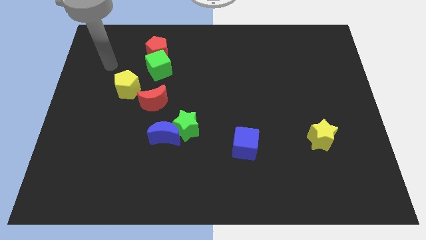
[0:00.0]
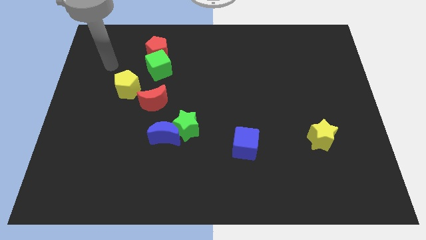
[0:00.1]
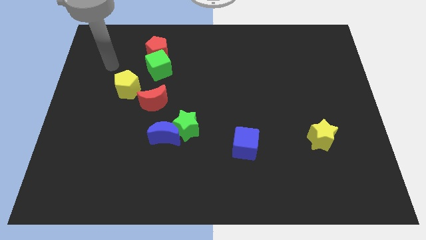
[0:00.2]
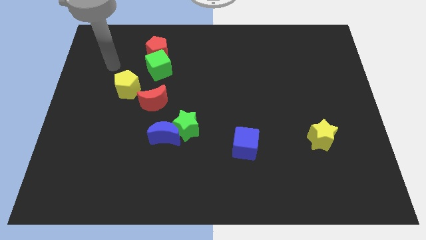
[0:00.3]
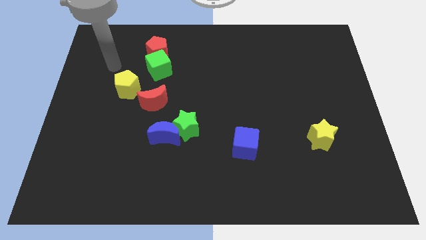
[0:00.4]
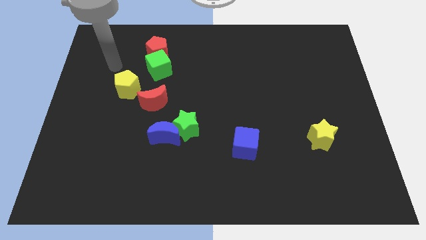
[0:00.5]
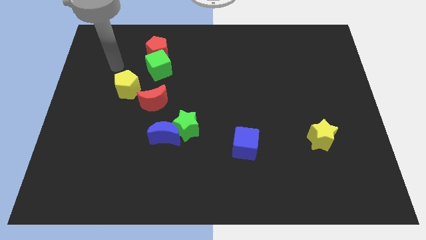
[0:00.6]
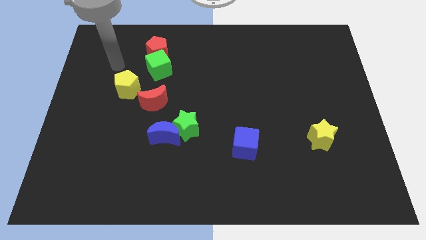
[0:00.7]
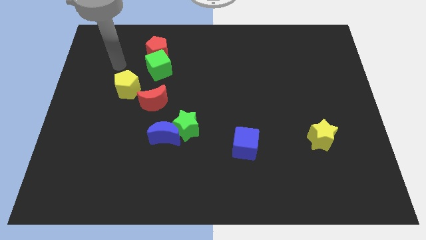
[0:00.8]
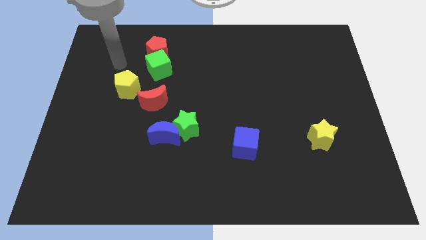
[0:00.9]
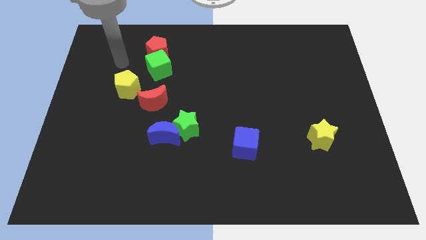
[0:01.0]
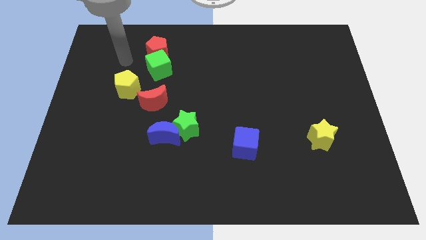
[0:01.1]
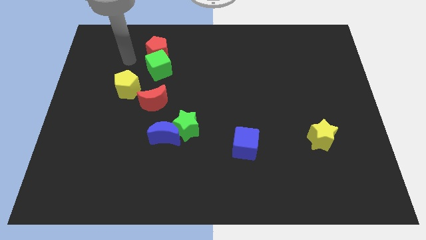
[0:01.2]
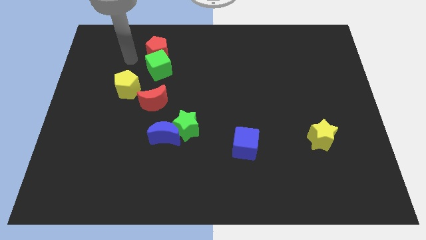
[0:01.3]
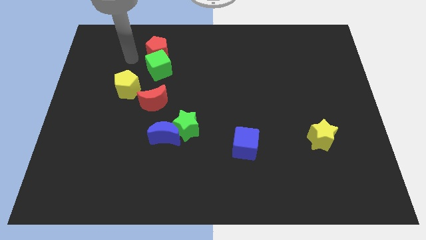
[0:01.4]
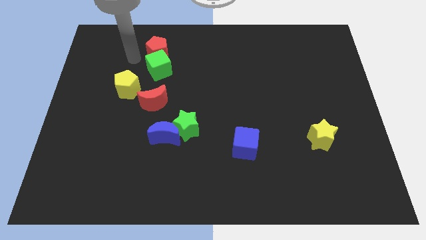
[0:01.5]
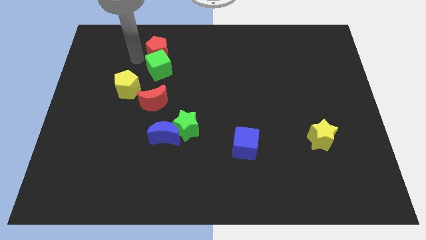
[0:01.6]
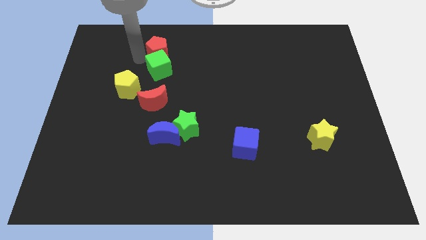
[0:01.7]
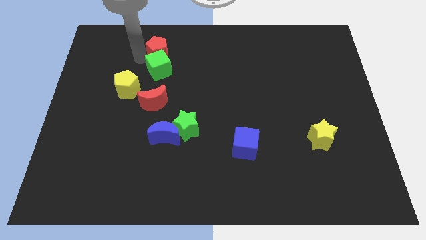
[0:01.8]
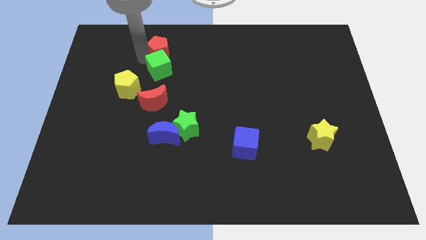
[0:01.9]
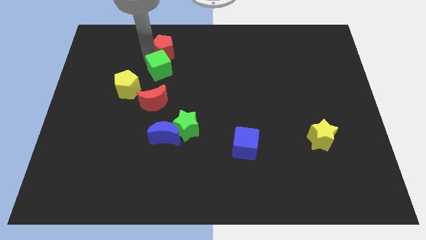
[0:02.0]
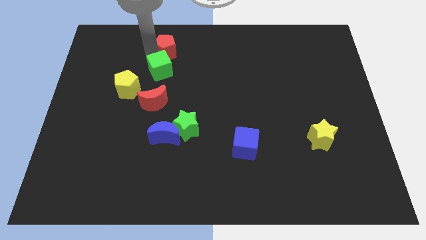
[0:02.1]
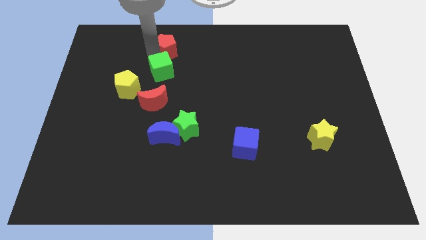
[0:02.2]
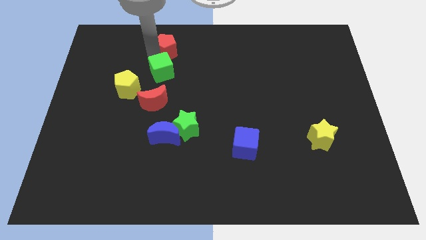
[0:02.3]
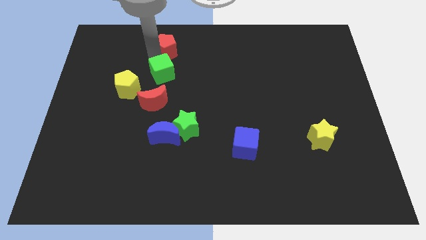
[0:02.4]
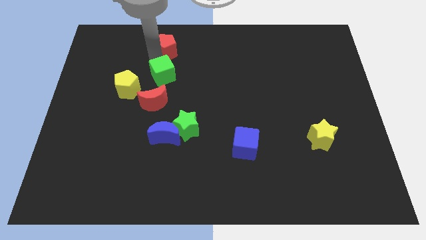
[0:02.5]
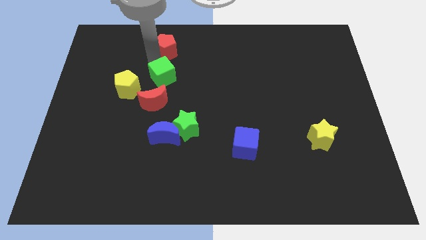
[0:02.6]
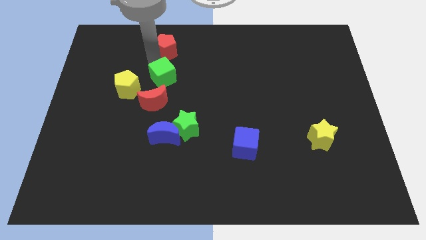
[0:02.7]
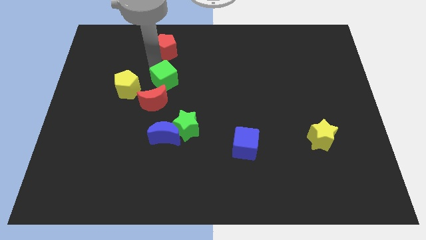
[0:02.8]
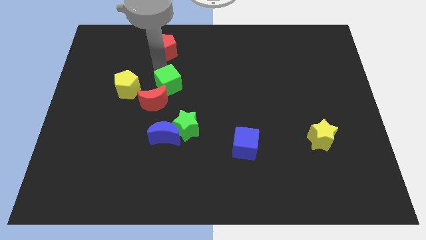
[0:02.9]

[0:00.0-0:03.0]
slightly push the green cube into the red crescent

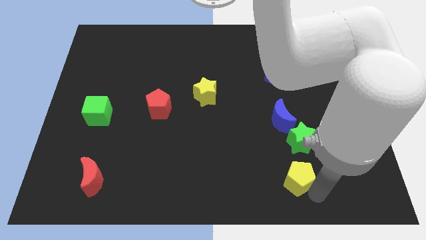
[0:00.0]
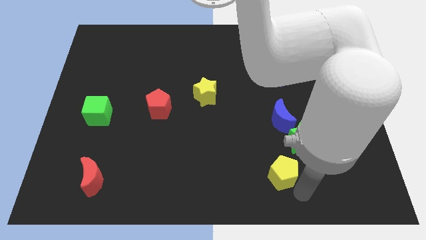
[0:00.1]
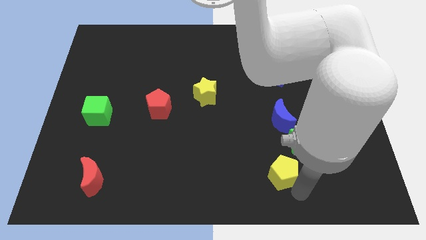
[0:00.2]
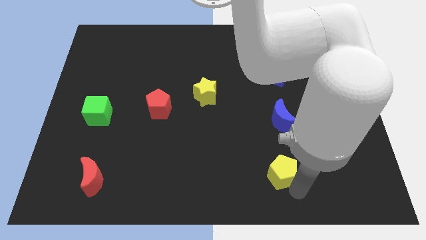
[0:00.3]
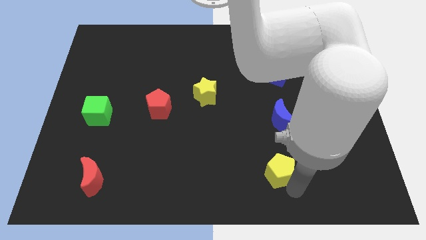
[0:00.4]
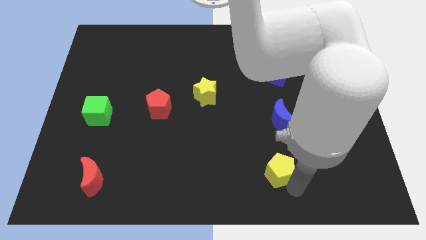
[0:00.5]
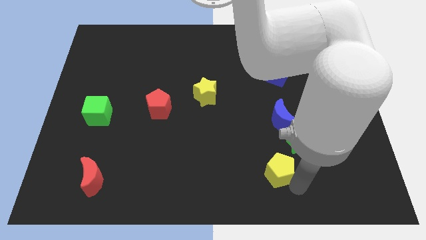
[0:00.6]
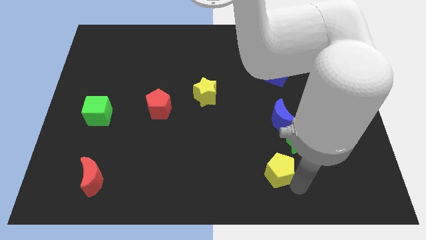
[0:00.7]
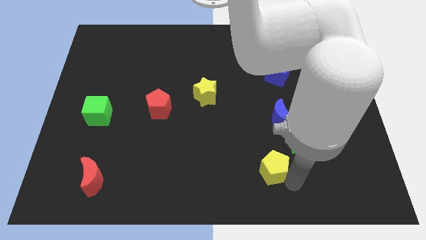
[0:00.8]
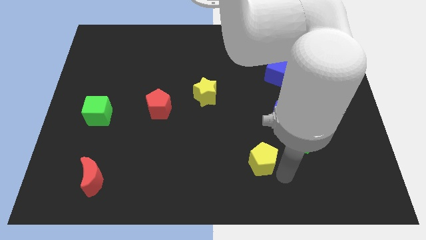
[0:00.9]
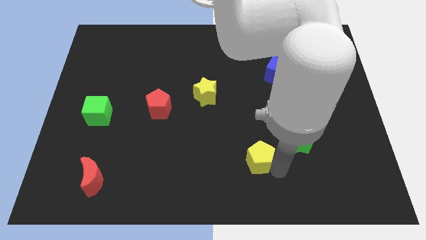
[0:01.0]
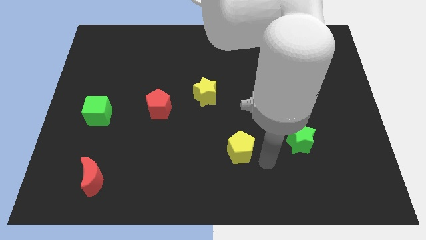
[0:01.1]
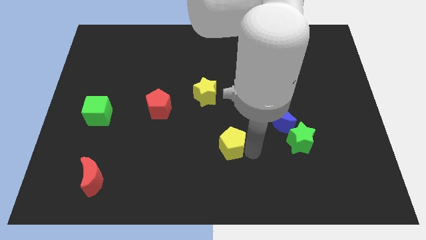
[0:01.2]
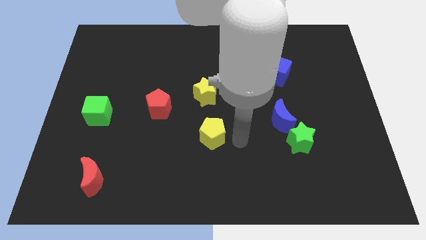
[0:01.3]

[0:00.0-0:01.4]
place the yellow pentagon left to the green star

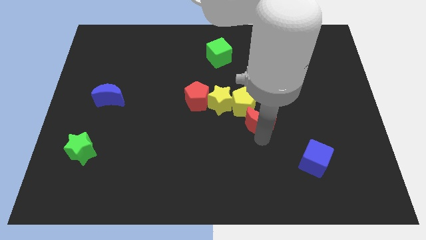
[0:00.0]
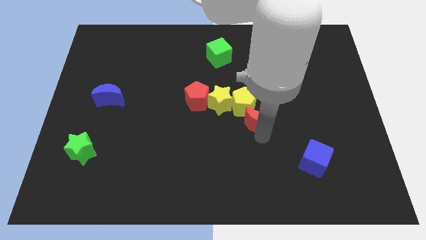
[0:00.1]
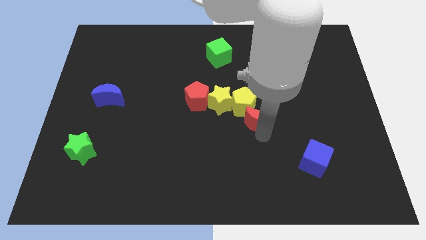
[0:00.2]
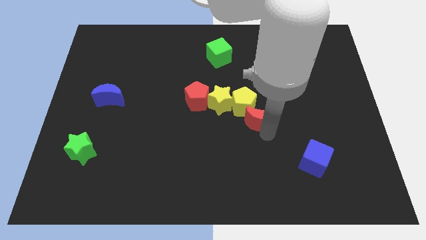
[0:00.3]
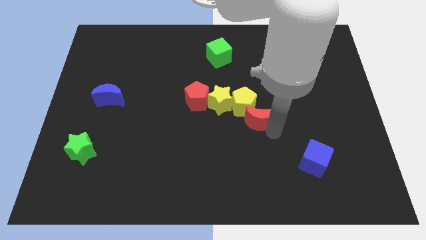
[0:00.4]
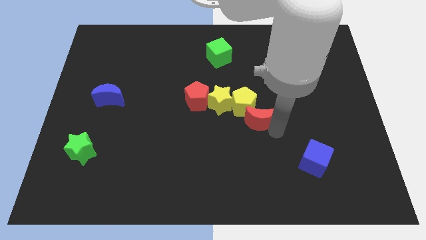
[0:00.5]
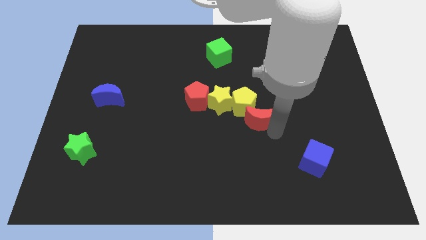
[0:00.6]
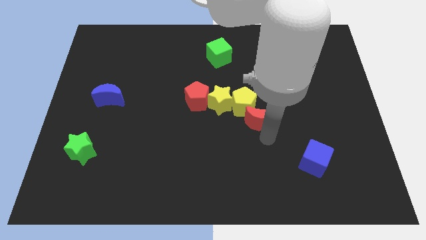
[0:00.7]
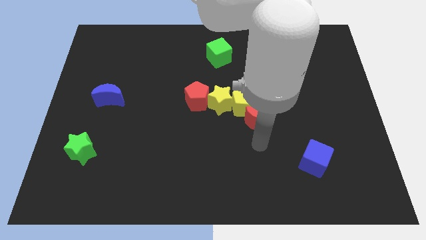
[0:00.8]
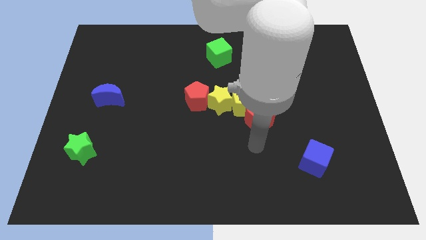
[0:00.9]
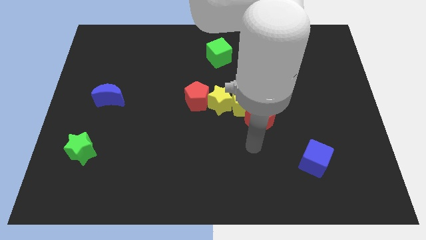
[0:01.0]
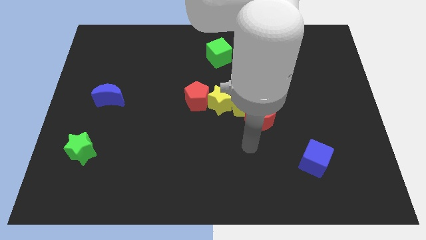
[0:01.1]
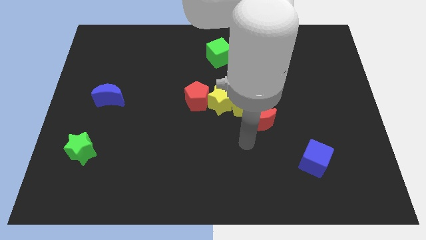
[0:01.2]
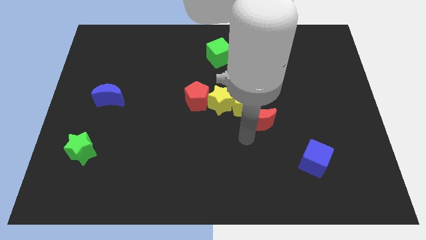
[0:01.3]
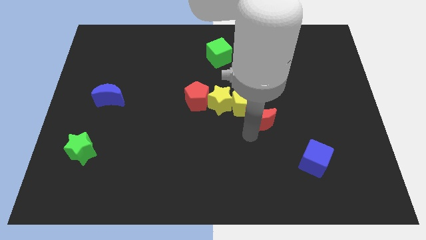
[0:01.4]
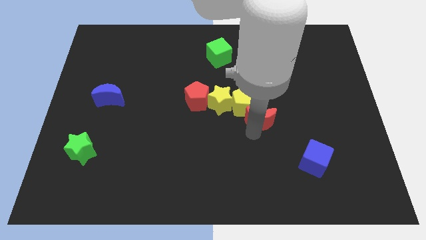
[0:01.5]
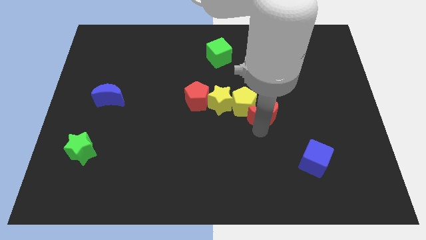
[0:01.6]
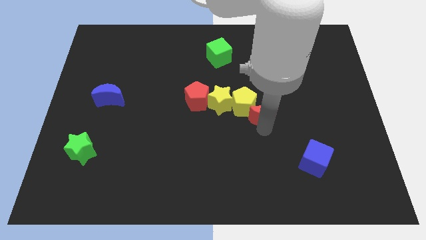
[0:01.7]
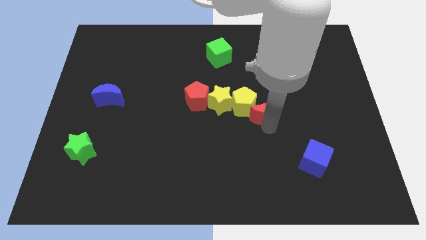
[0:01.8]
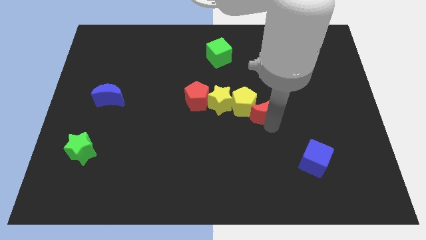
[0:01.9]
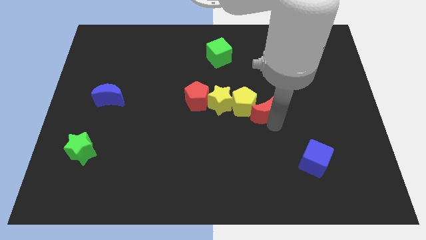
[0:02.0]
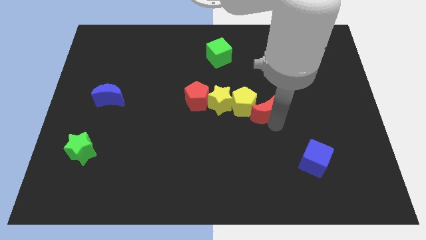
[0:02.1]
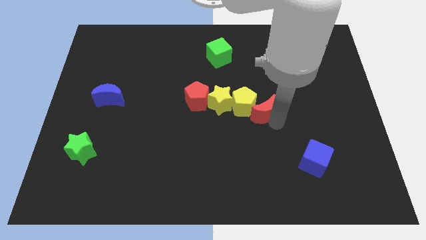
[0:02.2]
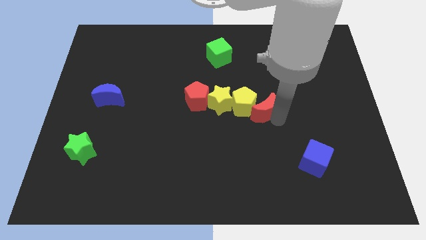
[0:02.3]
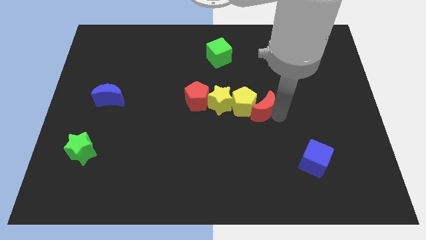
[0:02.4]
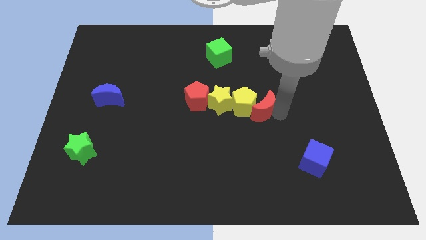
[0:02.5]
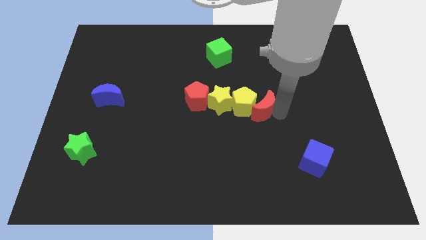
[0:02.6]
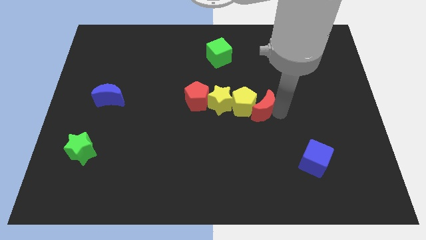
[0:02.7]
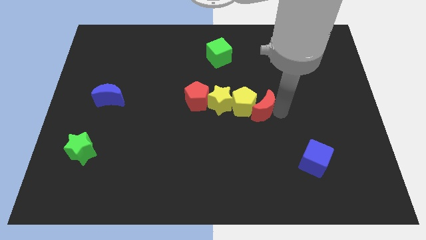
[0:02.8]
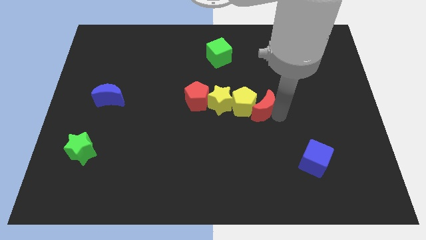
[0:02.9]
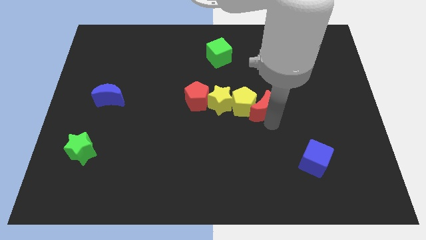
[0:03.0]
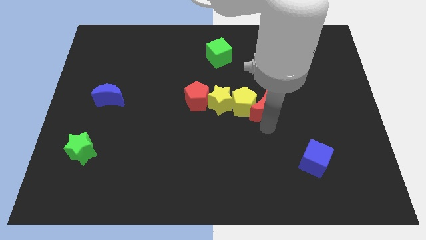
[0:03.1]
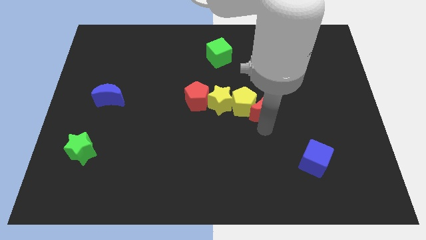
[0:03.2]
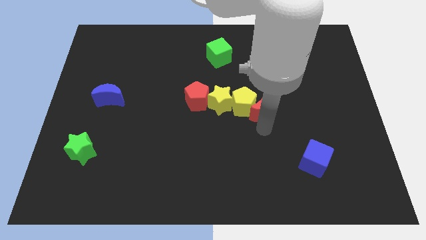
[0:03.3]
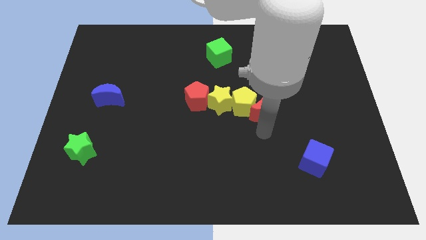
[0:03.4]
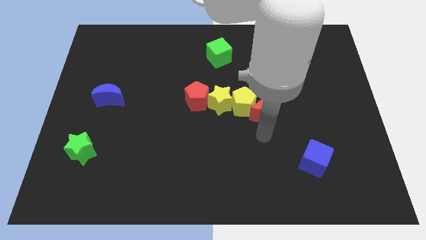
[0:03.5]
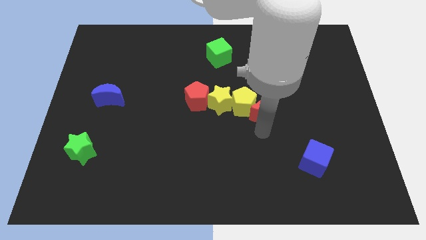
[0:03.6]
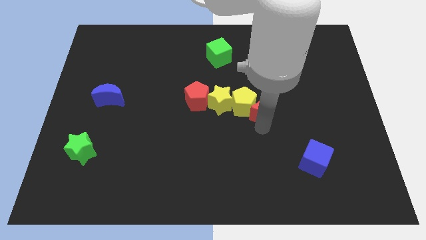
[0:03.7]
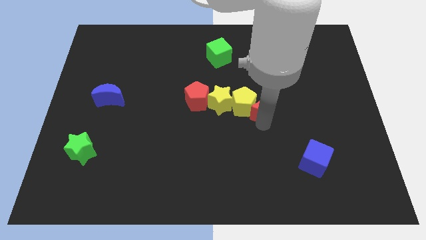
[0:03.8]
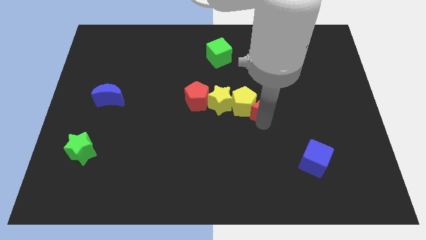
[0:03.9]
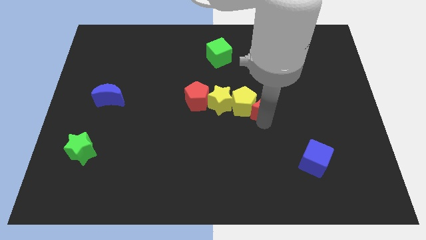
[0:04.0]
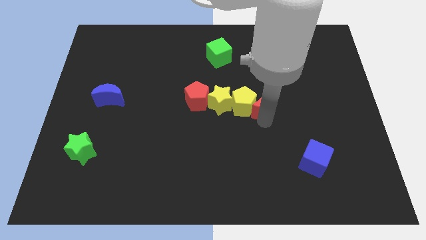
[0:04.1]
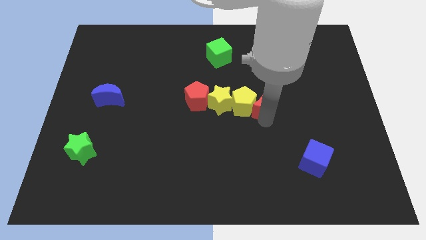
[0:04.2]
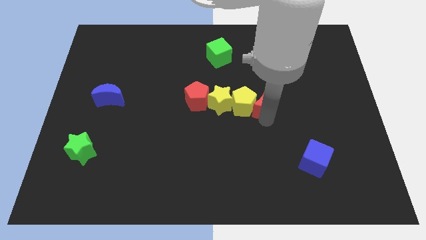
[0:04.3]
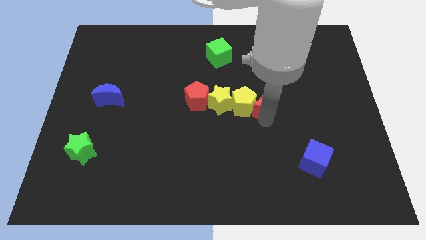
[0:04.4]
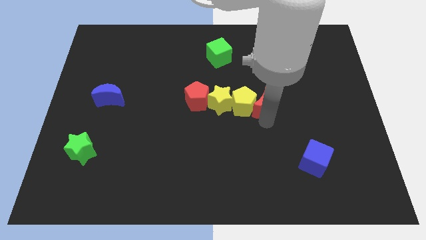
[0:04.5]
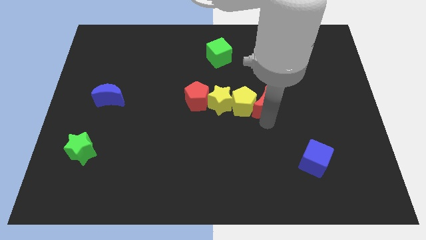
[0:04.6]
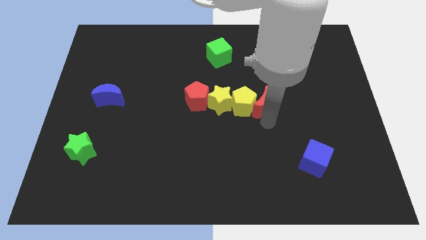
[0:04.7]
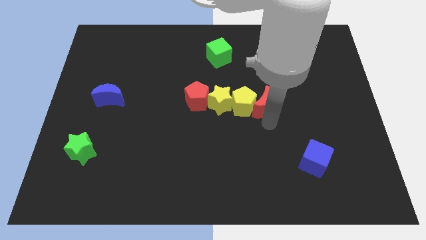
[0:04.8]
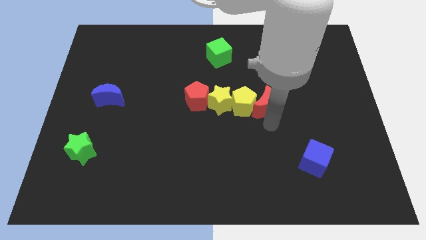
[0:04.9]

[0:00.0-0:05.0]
place the red crescent right of yellow pentagon
